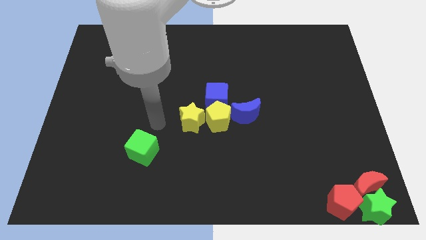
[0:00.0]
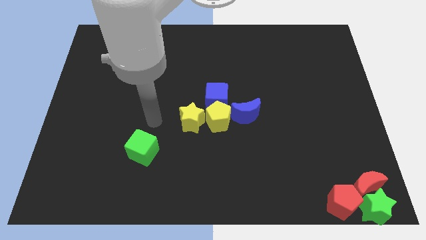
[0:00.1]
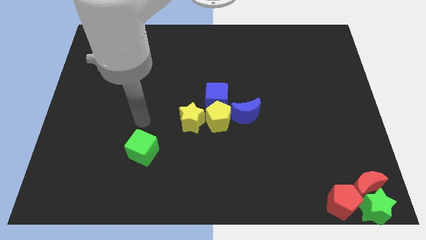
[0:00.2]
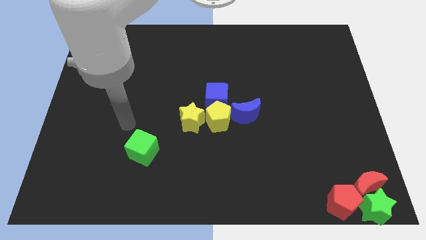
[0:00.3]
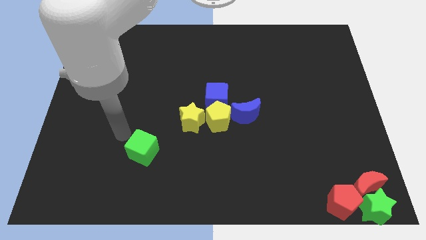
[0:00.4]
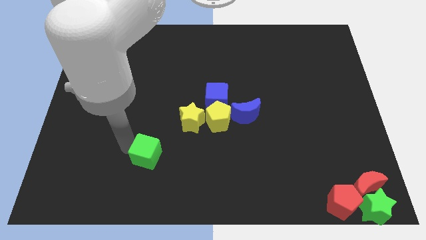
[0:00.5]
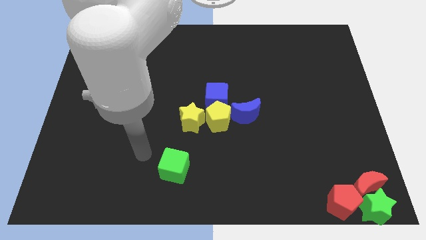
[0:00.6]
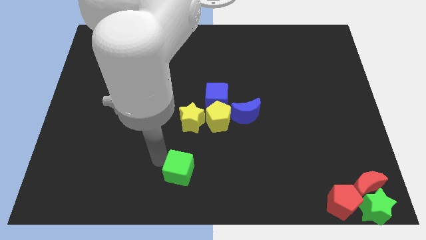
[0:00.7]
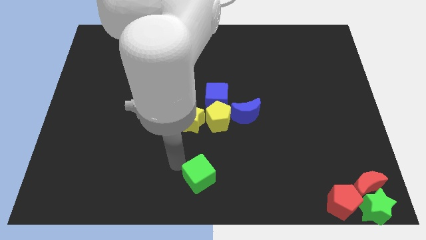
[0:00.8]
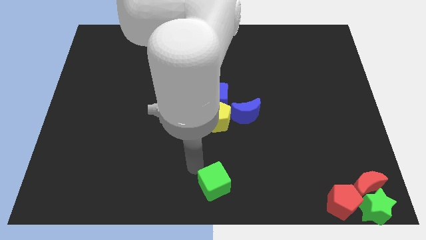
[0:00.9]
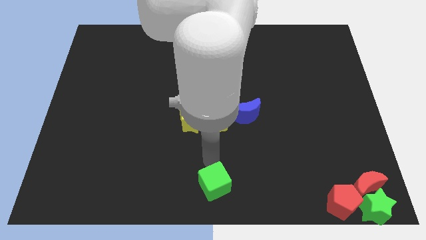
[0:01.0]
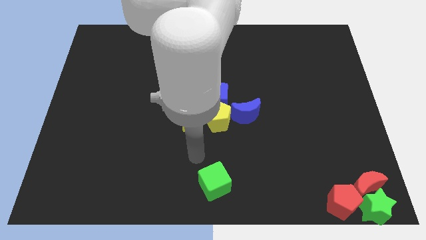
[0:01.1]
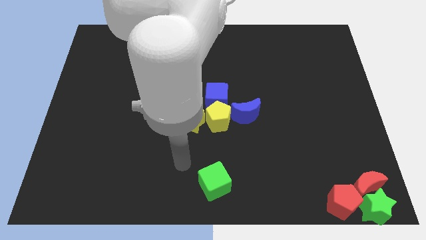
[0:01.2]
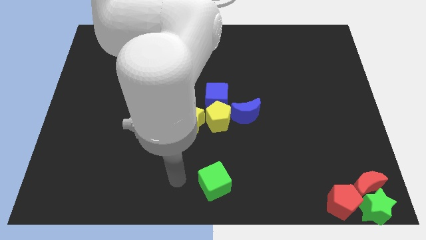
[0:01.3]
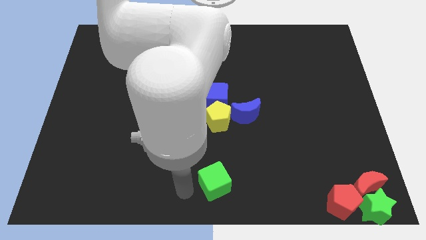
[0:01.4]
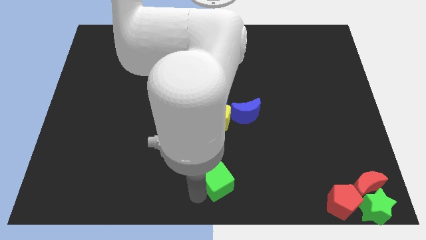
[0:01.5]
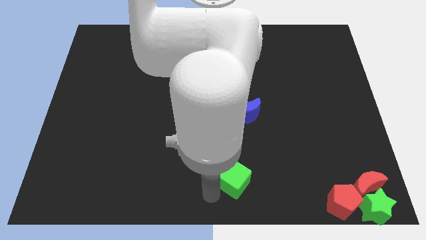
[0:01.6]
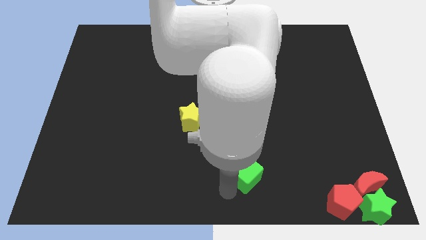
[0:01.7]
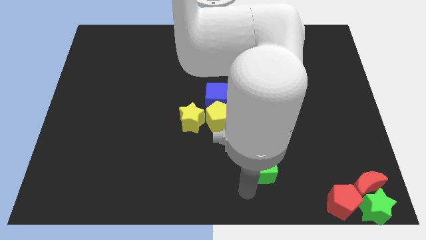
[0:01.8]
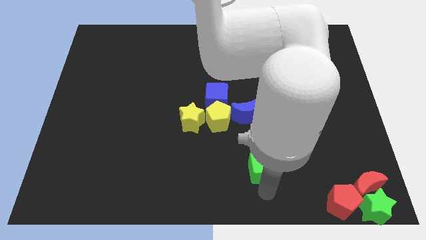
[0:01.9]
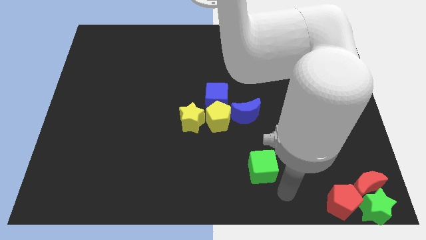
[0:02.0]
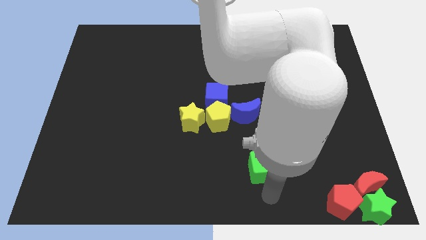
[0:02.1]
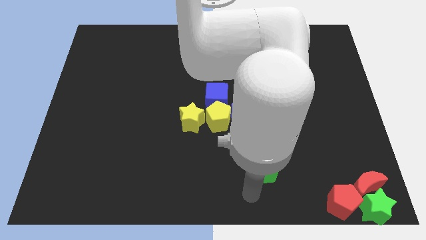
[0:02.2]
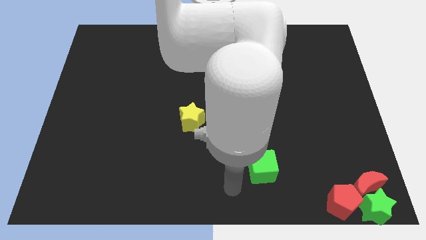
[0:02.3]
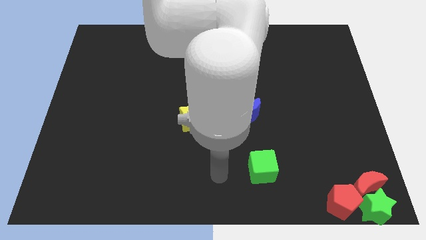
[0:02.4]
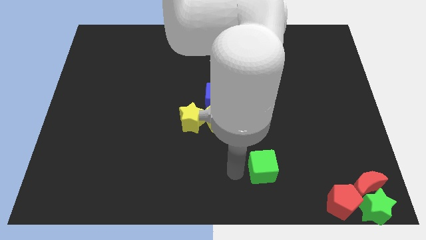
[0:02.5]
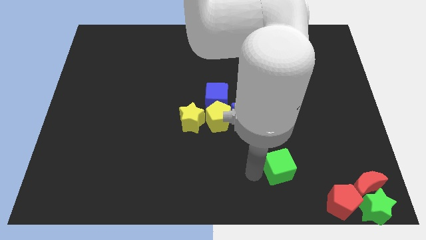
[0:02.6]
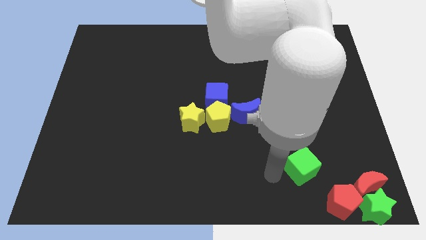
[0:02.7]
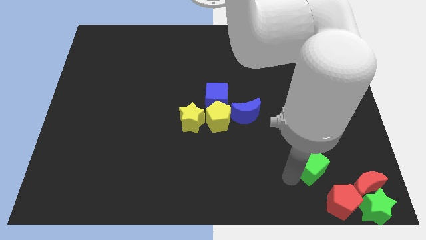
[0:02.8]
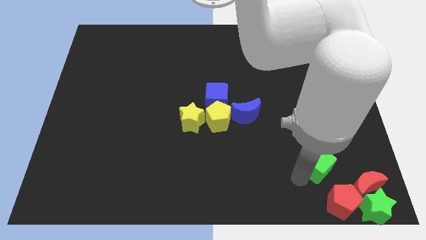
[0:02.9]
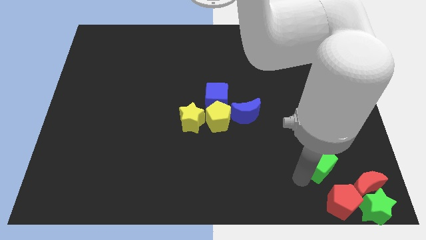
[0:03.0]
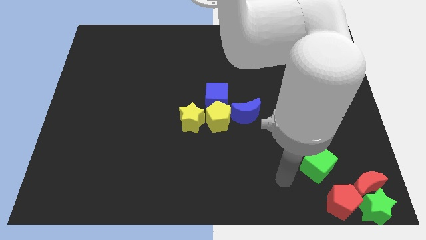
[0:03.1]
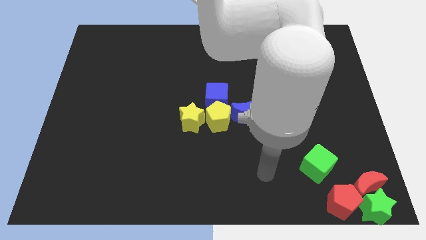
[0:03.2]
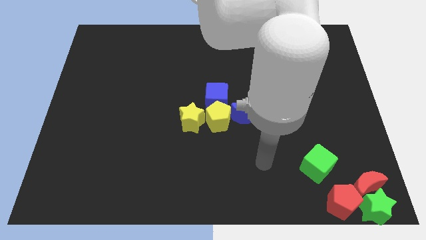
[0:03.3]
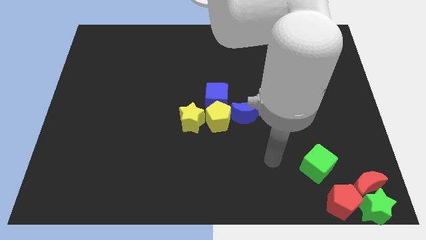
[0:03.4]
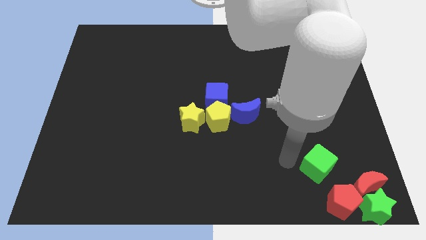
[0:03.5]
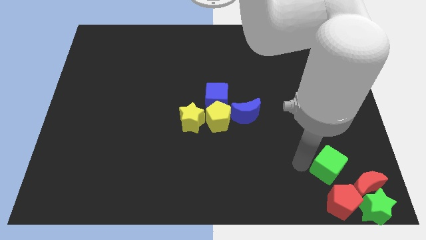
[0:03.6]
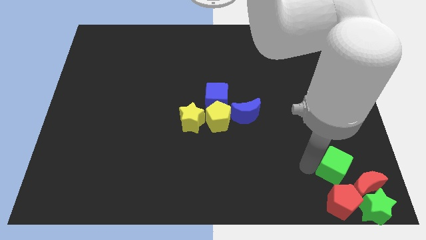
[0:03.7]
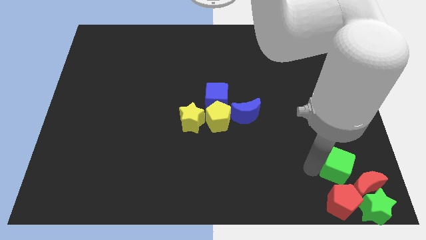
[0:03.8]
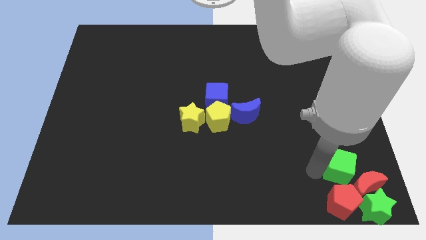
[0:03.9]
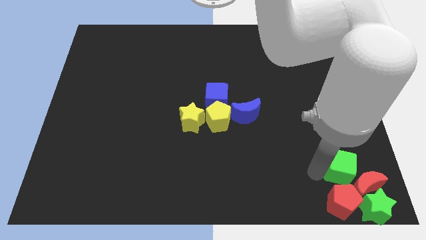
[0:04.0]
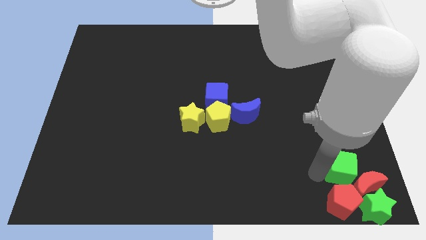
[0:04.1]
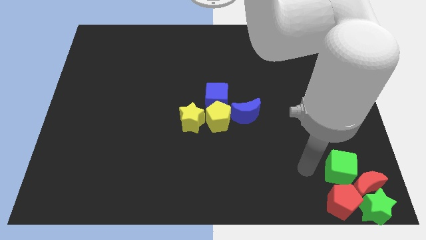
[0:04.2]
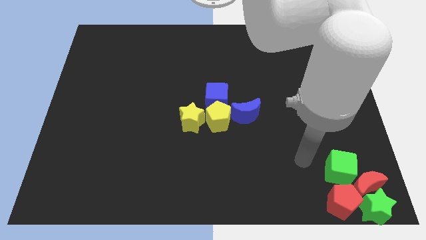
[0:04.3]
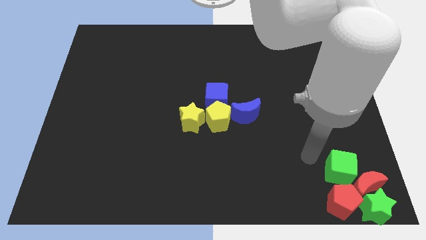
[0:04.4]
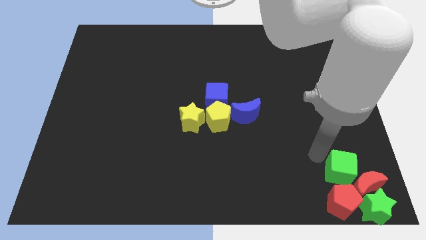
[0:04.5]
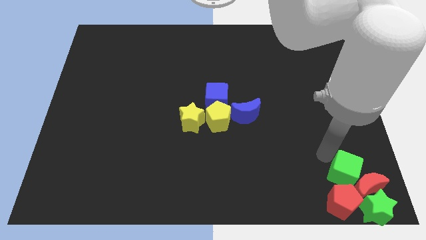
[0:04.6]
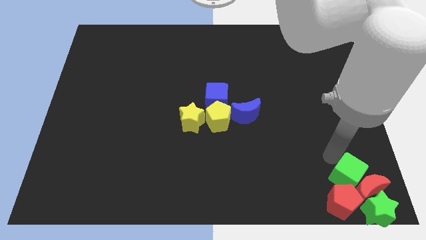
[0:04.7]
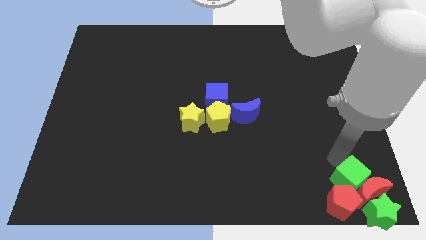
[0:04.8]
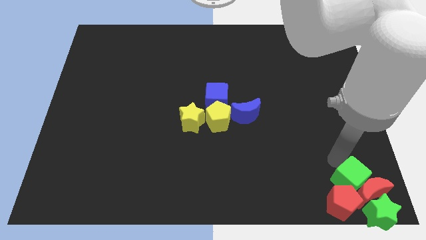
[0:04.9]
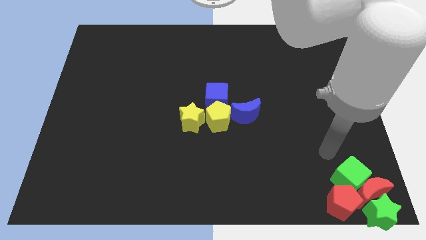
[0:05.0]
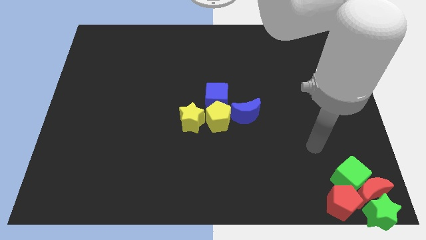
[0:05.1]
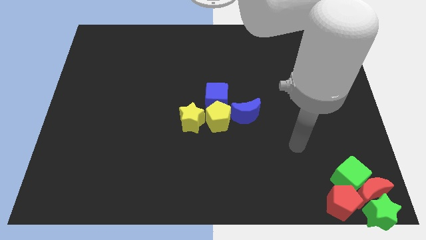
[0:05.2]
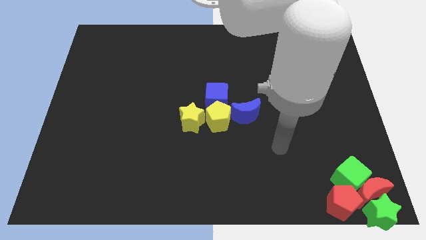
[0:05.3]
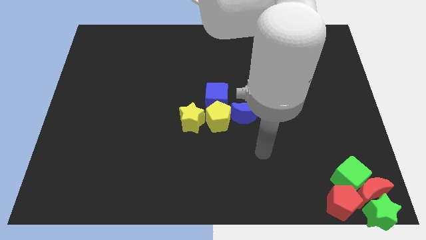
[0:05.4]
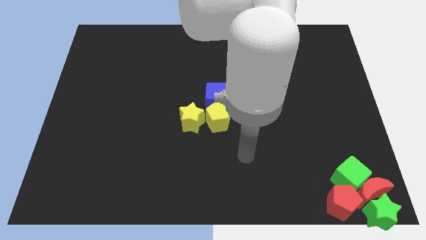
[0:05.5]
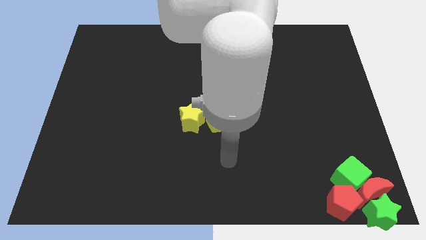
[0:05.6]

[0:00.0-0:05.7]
move the green cube into the group of blocks

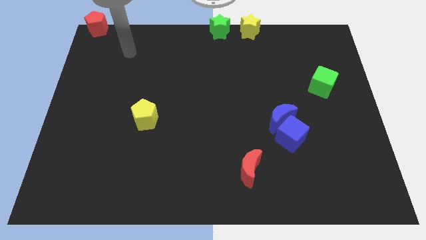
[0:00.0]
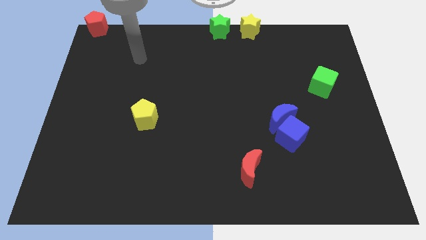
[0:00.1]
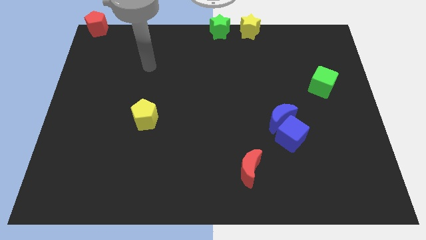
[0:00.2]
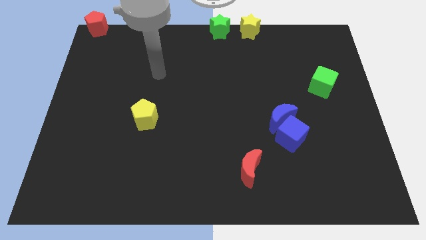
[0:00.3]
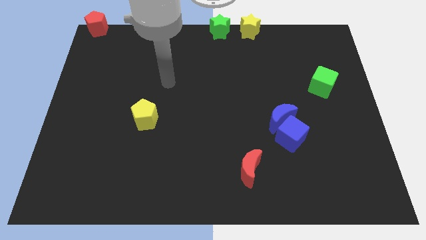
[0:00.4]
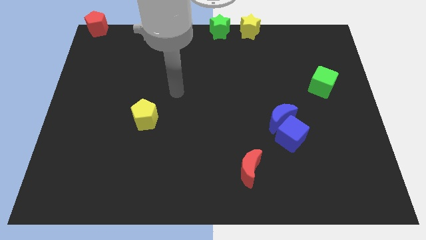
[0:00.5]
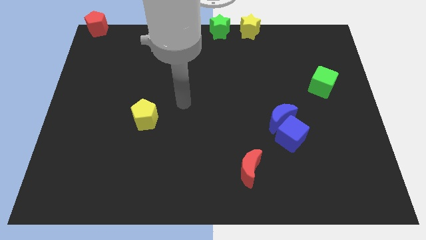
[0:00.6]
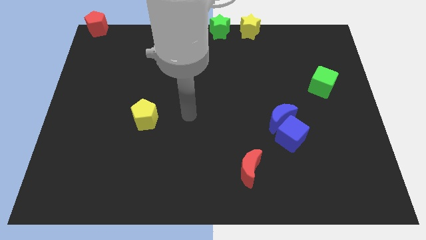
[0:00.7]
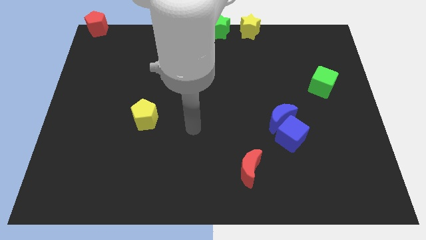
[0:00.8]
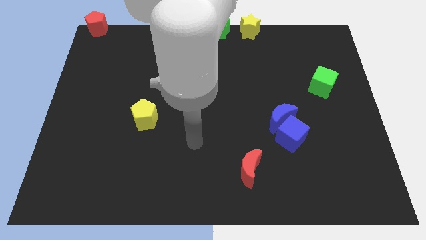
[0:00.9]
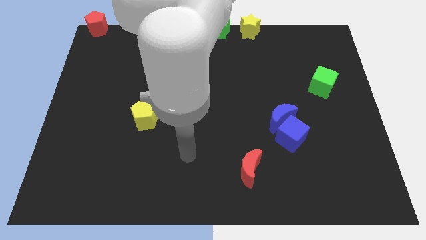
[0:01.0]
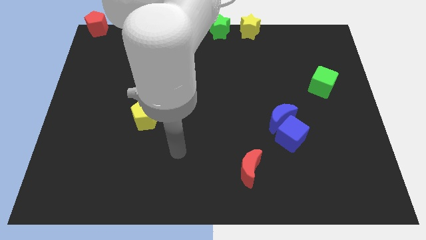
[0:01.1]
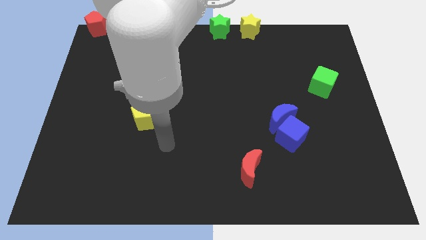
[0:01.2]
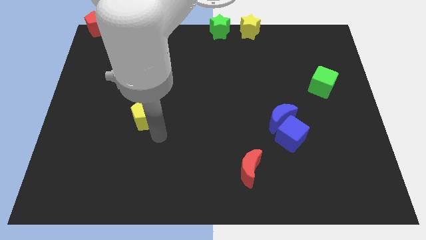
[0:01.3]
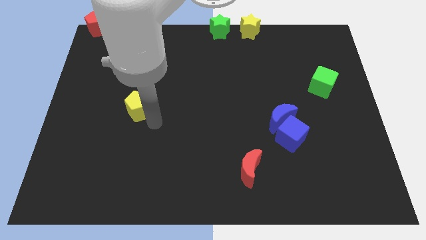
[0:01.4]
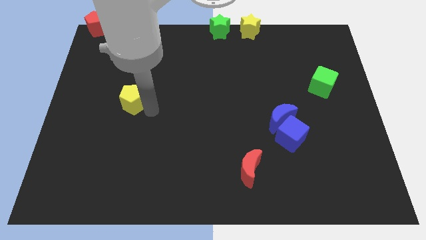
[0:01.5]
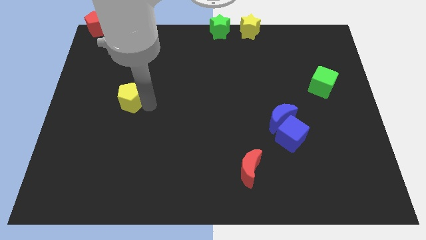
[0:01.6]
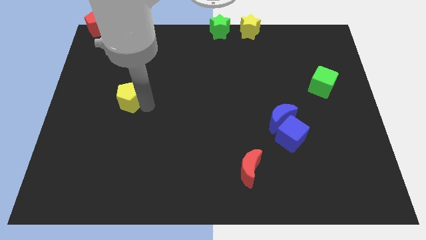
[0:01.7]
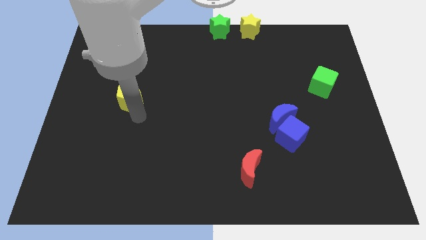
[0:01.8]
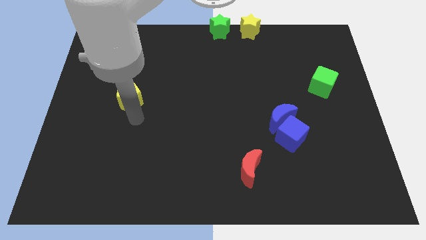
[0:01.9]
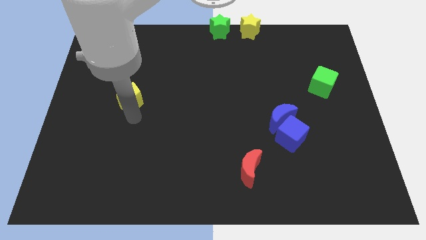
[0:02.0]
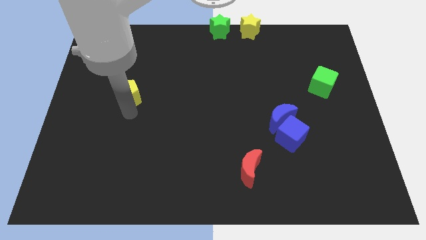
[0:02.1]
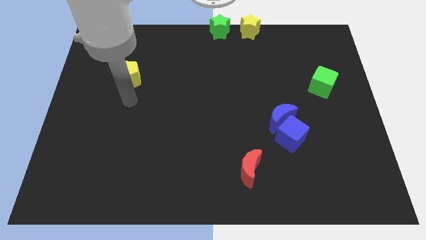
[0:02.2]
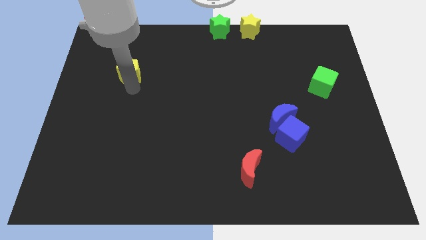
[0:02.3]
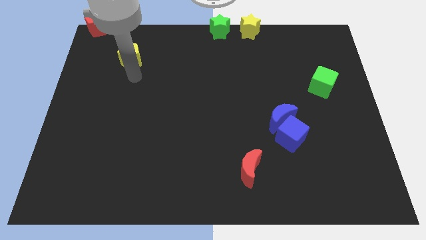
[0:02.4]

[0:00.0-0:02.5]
slightly push the yellow pentagon upwards

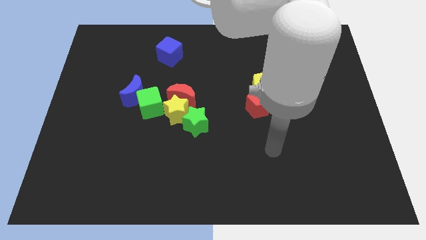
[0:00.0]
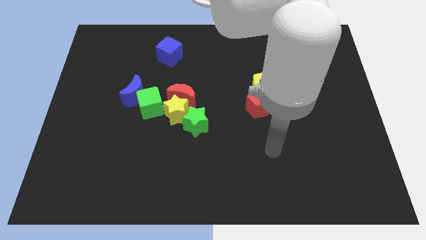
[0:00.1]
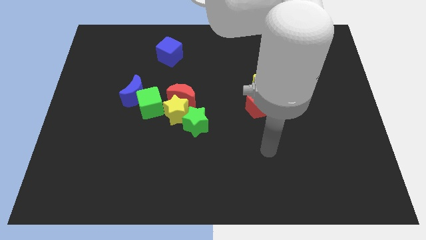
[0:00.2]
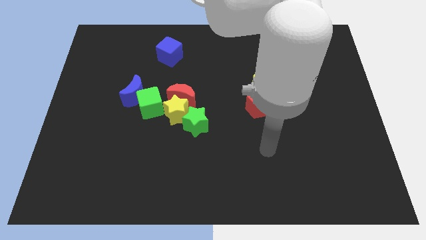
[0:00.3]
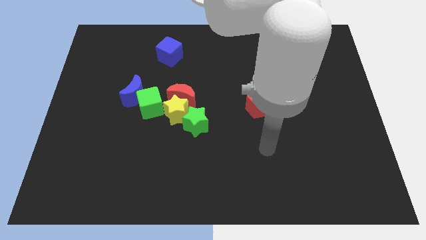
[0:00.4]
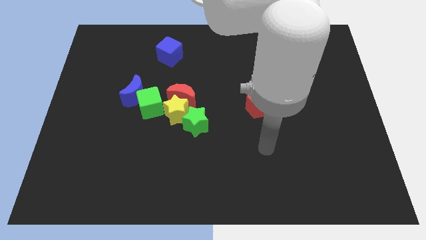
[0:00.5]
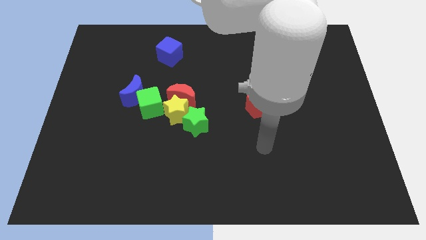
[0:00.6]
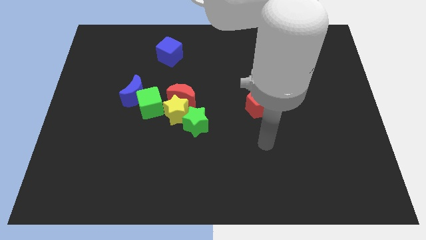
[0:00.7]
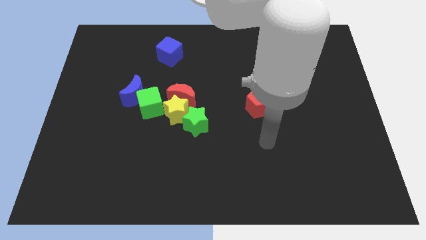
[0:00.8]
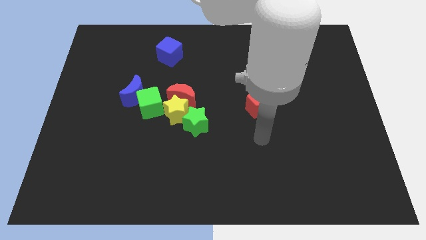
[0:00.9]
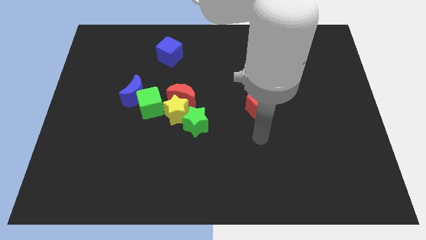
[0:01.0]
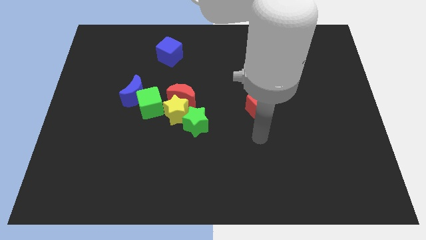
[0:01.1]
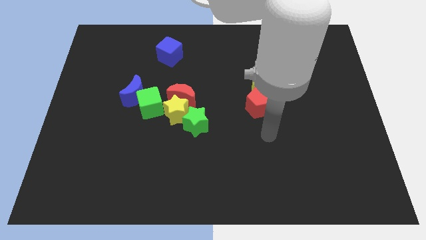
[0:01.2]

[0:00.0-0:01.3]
point your arm at the bottom of the red pentagon
